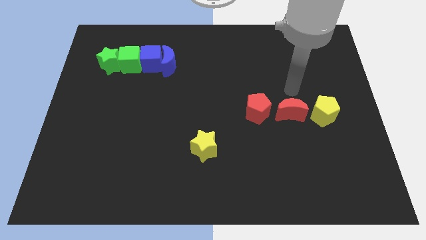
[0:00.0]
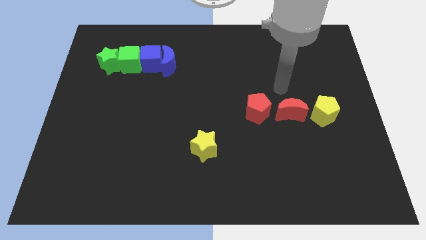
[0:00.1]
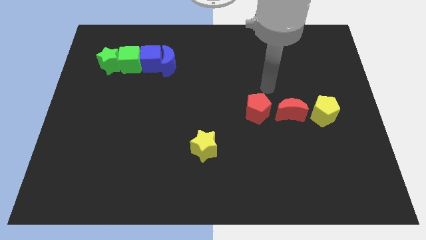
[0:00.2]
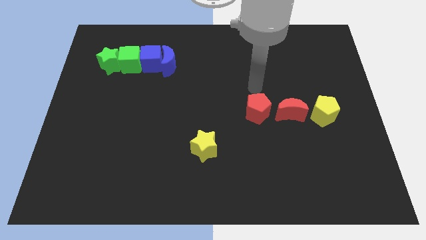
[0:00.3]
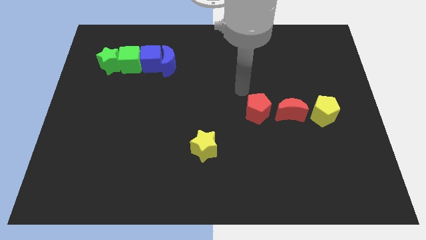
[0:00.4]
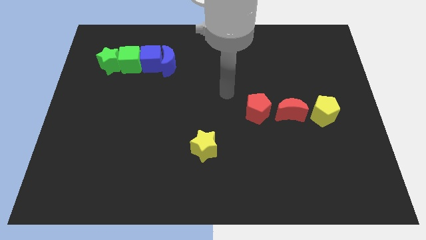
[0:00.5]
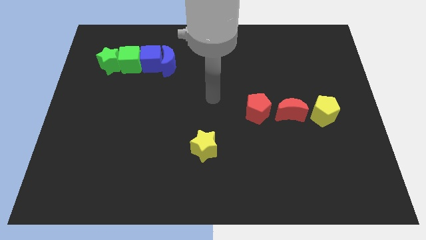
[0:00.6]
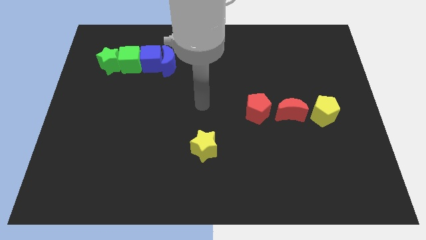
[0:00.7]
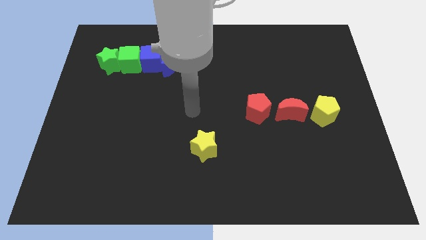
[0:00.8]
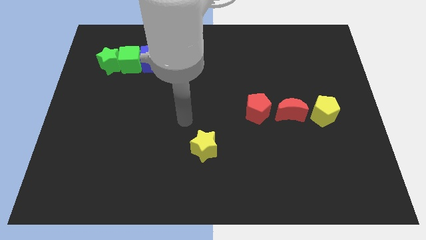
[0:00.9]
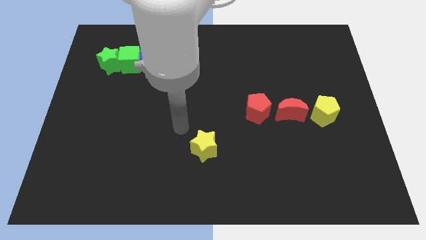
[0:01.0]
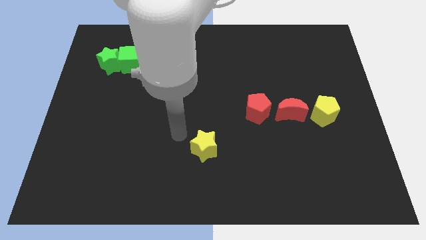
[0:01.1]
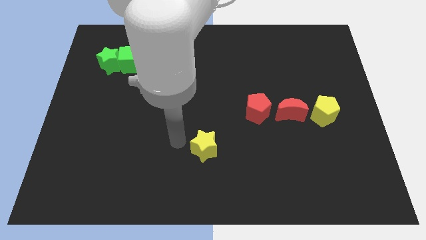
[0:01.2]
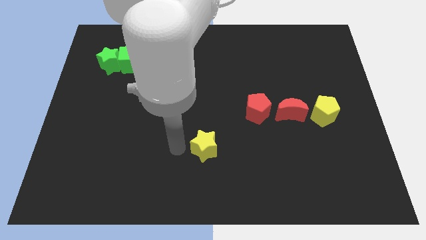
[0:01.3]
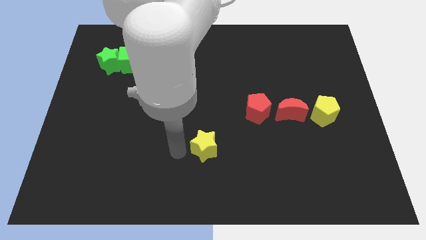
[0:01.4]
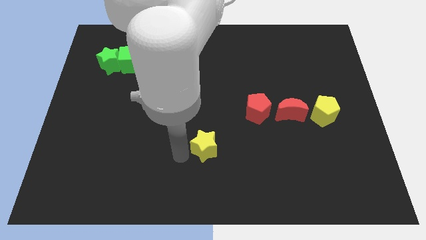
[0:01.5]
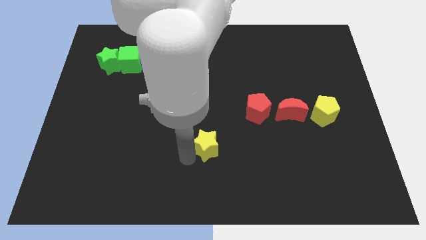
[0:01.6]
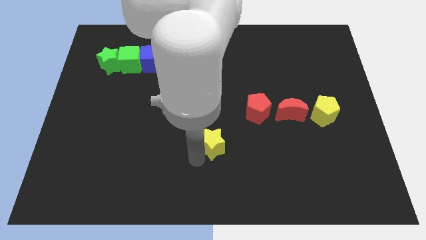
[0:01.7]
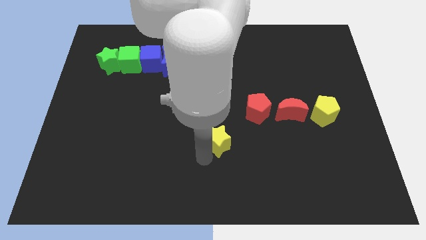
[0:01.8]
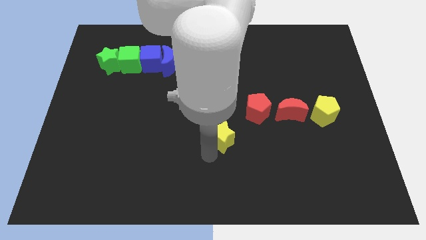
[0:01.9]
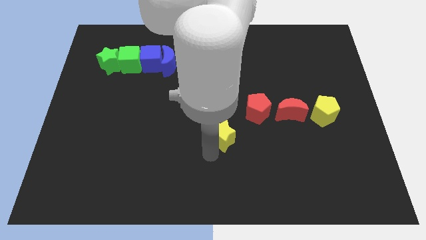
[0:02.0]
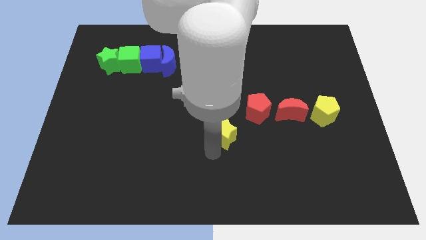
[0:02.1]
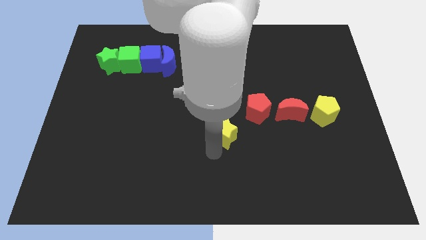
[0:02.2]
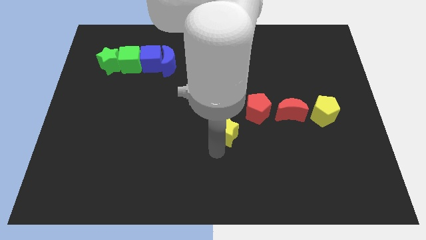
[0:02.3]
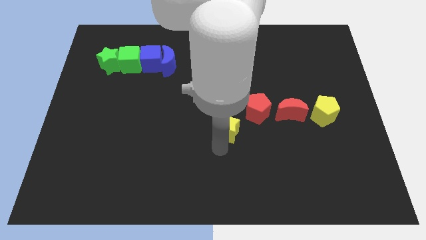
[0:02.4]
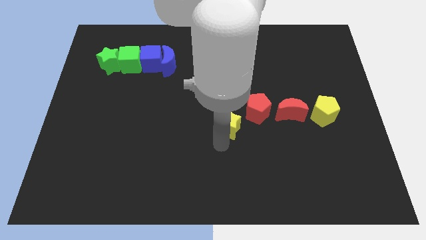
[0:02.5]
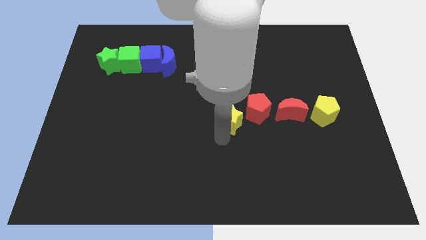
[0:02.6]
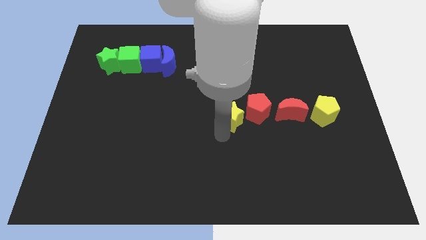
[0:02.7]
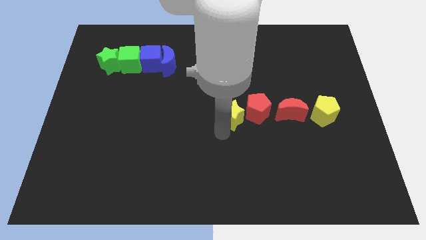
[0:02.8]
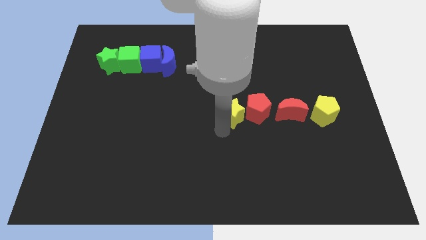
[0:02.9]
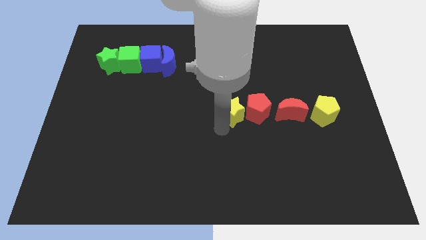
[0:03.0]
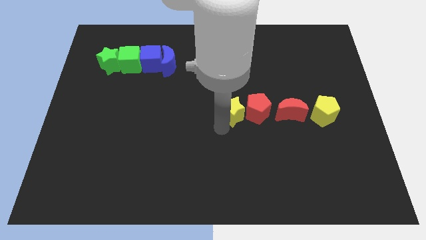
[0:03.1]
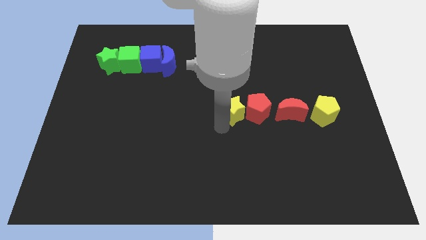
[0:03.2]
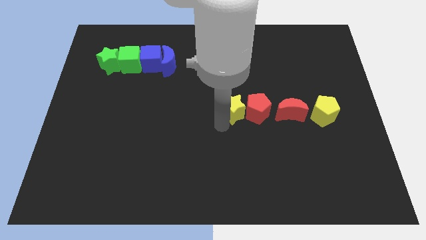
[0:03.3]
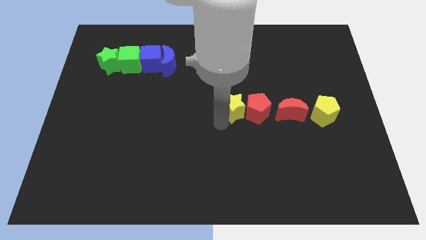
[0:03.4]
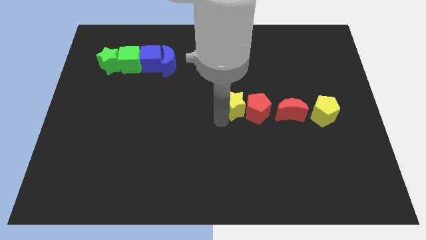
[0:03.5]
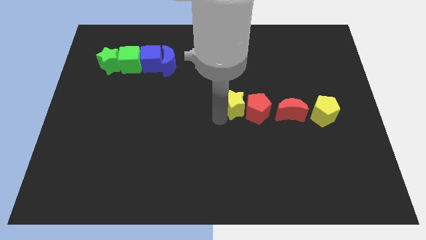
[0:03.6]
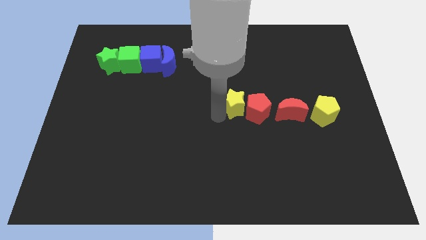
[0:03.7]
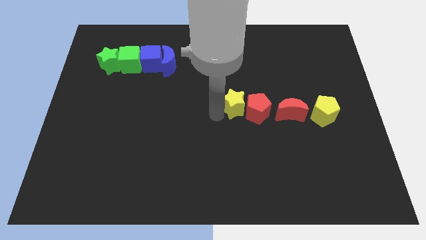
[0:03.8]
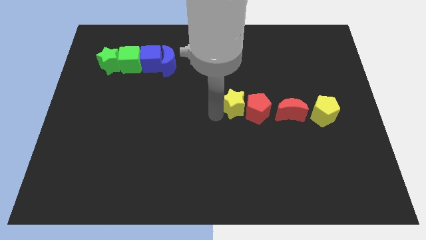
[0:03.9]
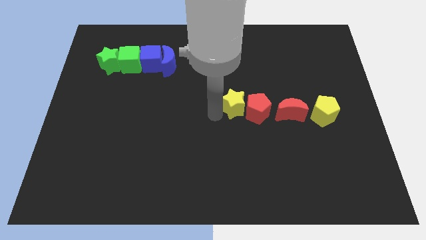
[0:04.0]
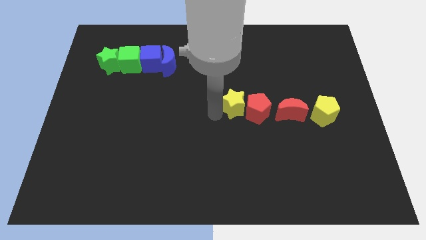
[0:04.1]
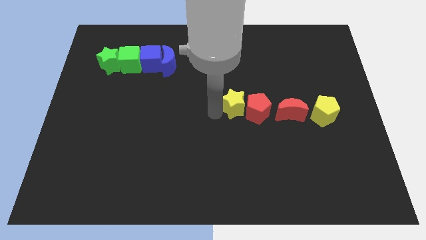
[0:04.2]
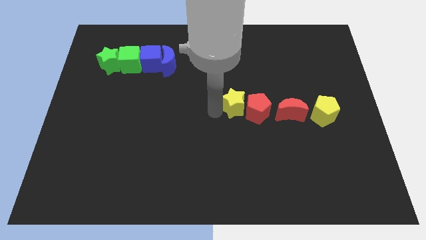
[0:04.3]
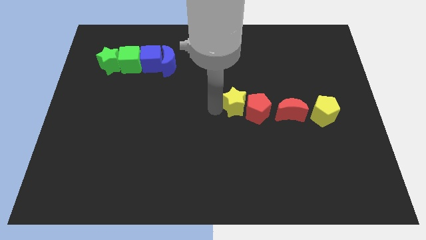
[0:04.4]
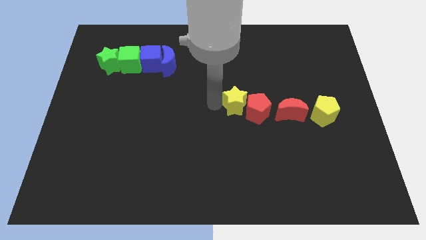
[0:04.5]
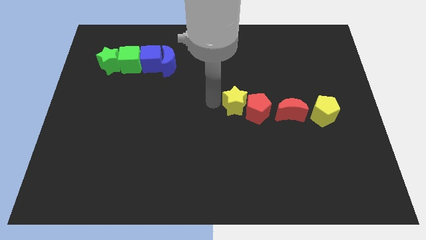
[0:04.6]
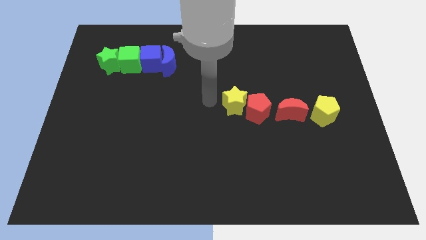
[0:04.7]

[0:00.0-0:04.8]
move the yellow star to the left of red penatgon

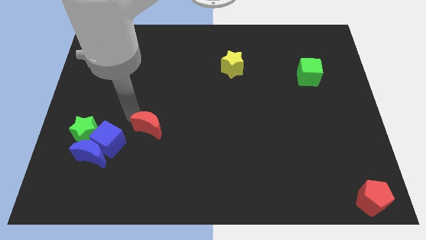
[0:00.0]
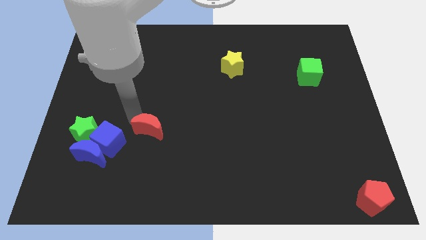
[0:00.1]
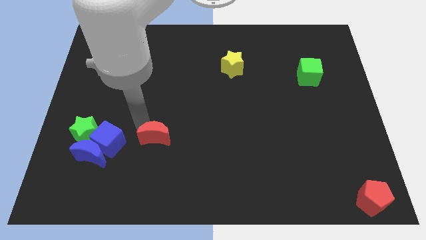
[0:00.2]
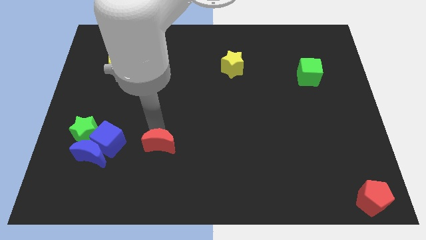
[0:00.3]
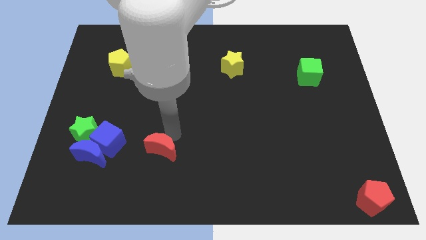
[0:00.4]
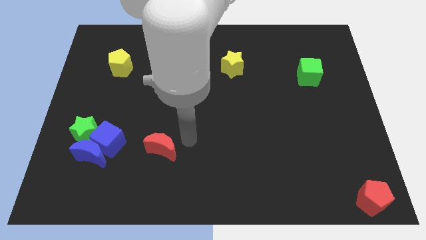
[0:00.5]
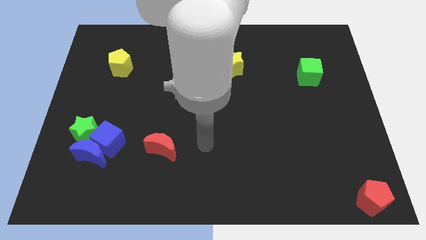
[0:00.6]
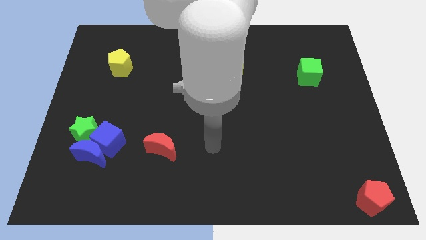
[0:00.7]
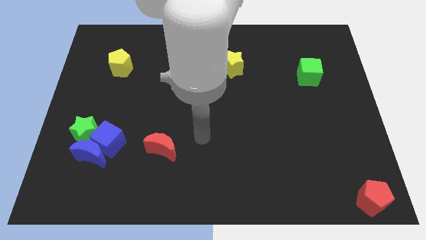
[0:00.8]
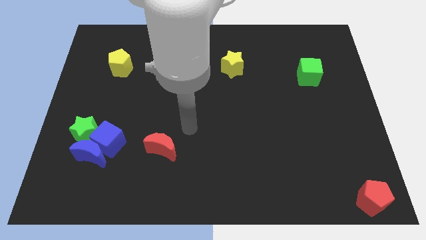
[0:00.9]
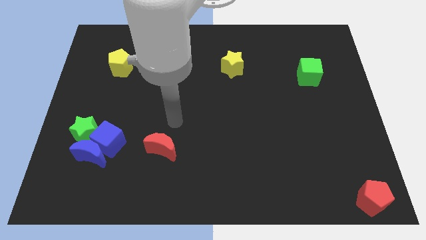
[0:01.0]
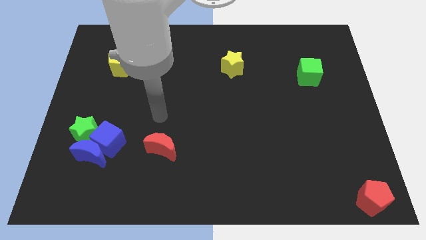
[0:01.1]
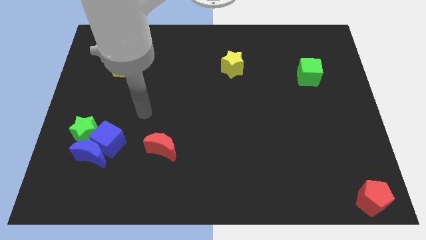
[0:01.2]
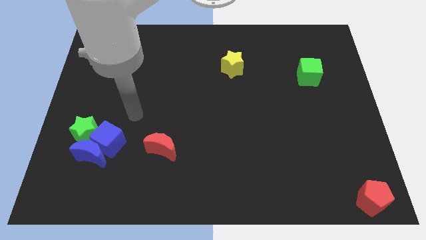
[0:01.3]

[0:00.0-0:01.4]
move your arm away from the red moon

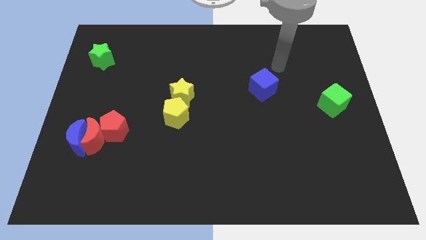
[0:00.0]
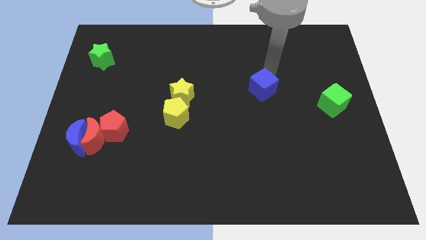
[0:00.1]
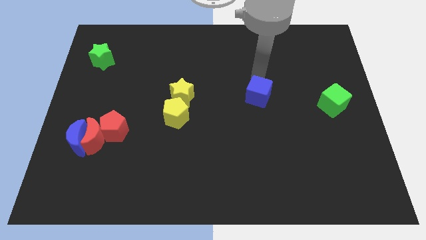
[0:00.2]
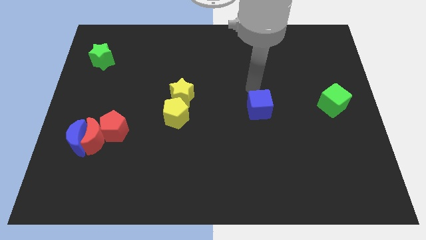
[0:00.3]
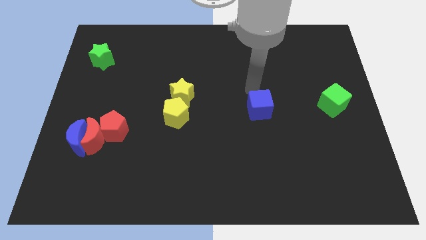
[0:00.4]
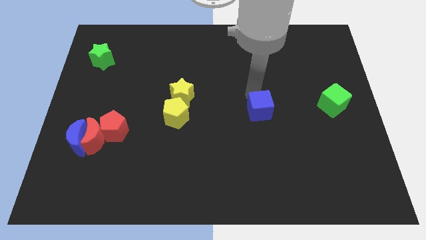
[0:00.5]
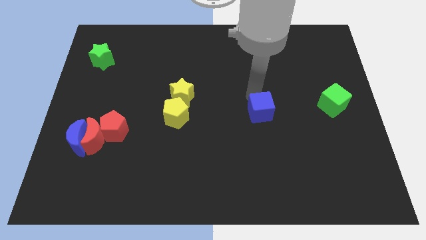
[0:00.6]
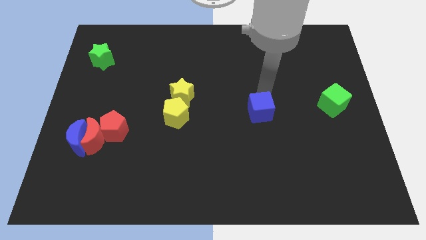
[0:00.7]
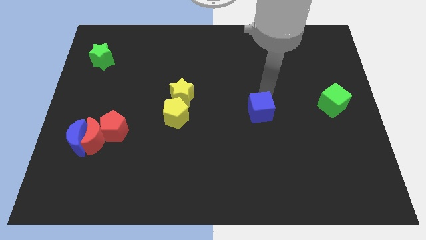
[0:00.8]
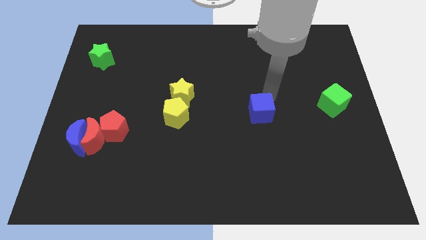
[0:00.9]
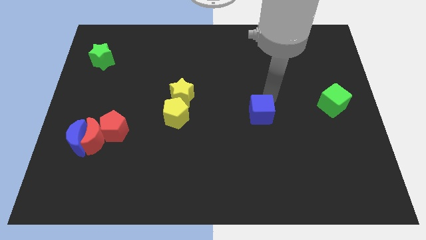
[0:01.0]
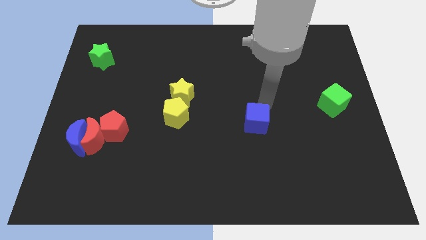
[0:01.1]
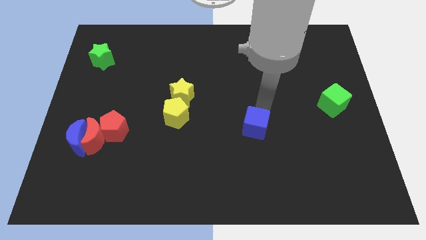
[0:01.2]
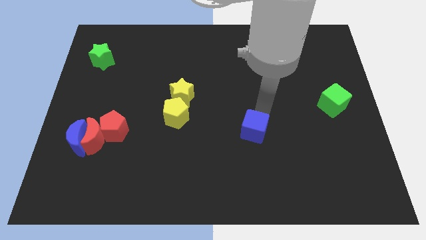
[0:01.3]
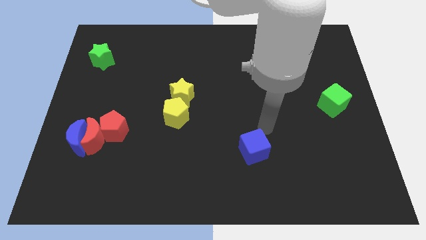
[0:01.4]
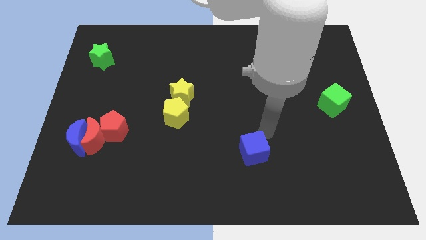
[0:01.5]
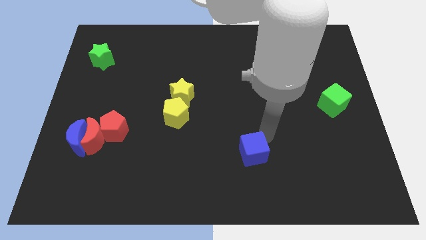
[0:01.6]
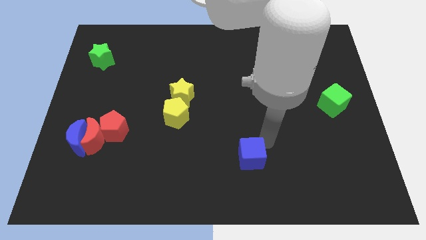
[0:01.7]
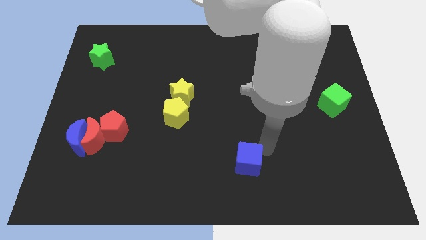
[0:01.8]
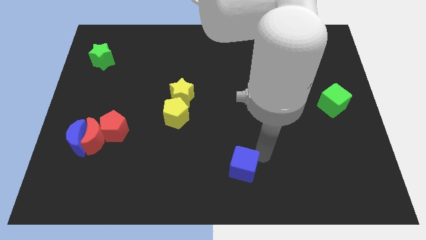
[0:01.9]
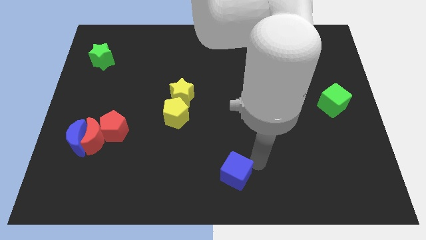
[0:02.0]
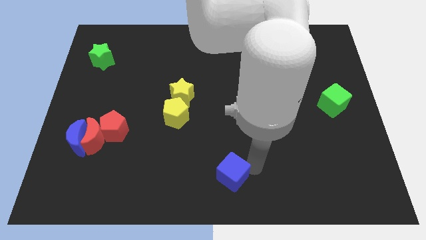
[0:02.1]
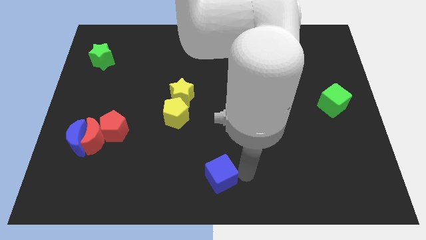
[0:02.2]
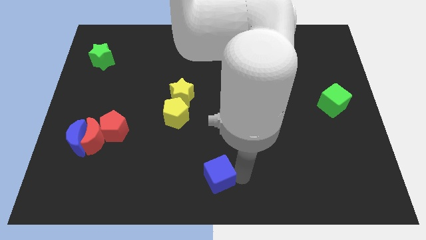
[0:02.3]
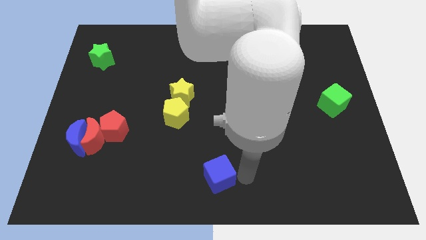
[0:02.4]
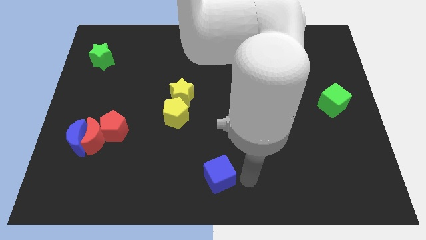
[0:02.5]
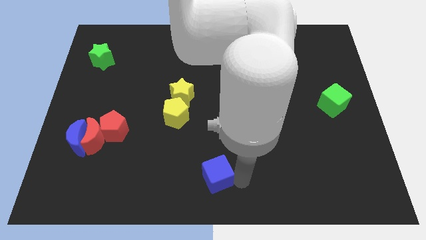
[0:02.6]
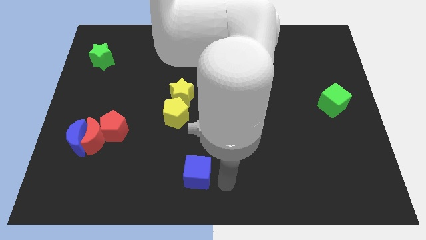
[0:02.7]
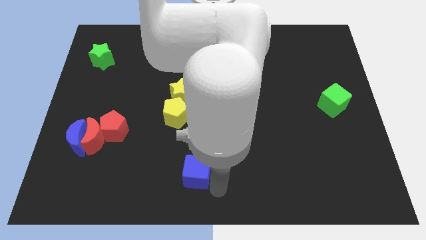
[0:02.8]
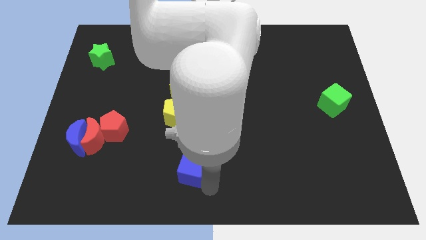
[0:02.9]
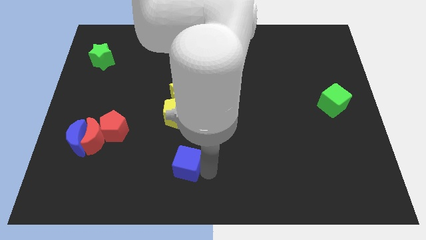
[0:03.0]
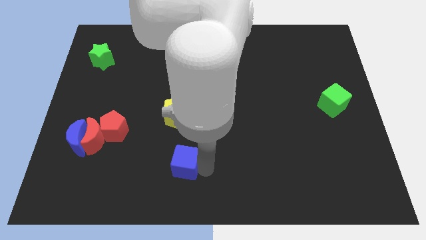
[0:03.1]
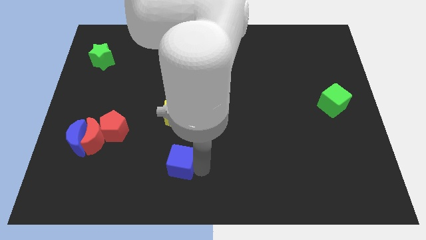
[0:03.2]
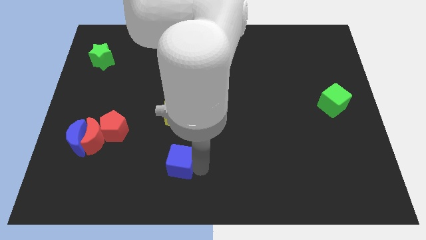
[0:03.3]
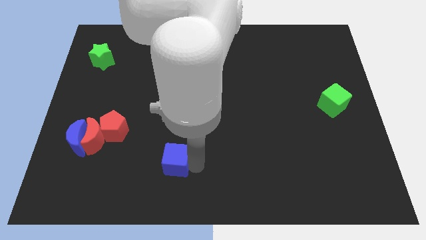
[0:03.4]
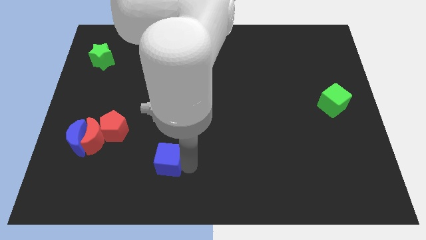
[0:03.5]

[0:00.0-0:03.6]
place the blue cube vertically below the yellow pentagon
